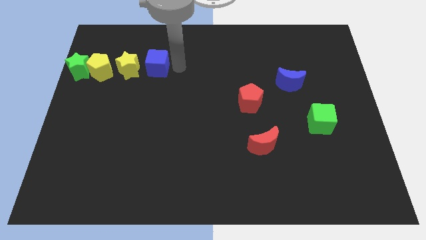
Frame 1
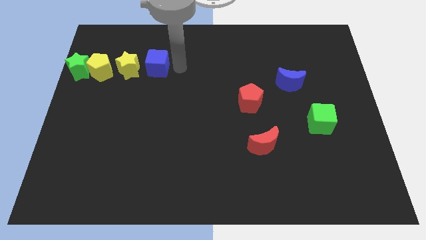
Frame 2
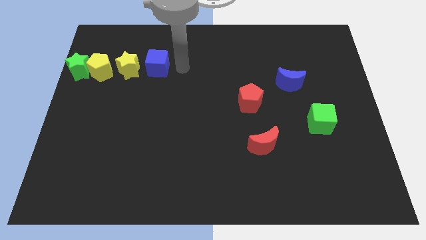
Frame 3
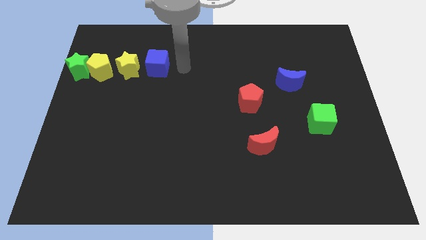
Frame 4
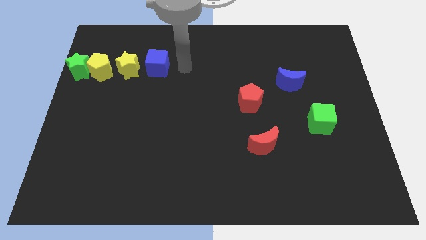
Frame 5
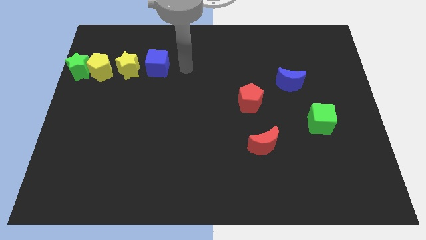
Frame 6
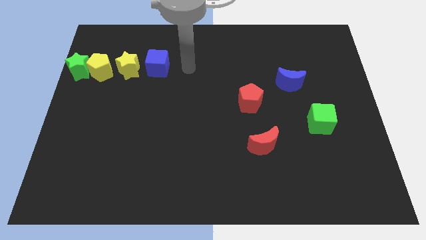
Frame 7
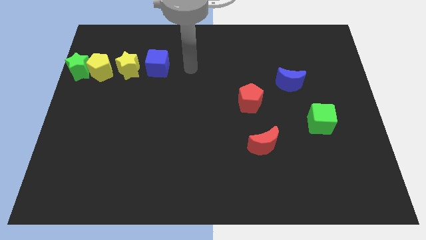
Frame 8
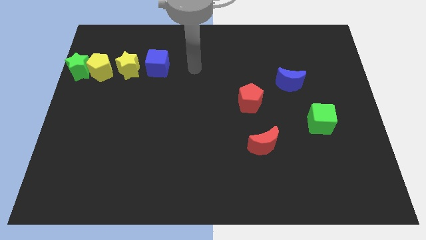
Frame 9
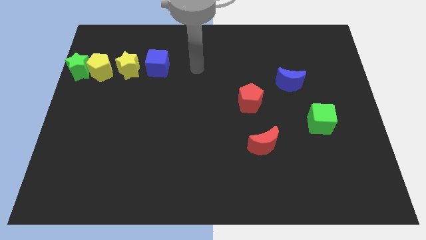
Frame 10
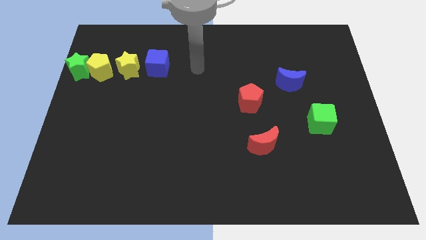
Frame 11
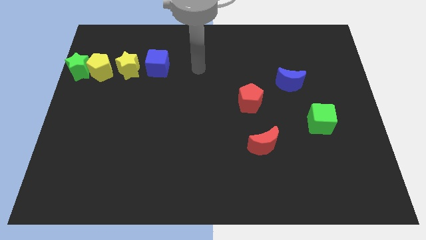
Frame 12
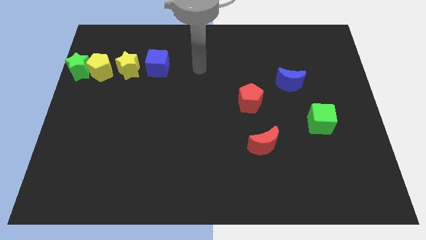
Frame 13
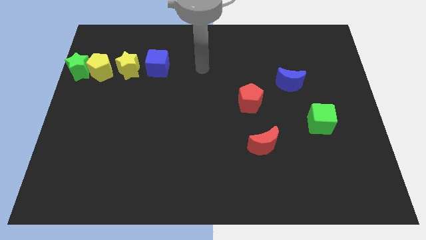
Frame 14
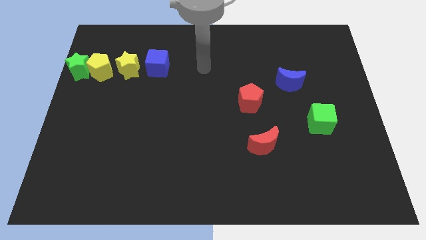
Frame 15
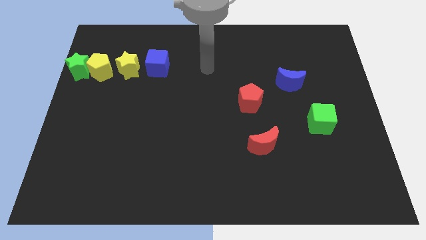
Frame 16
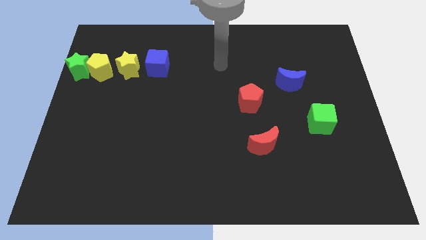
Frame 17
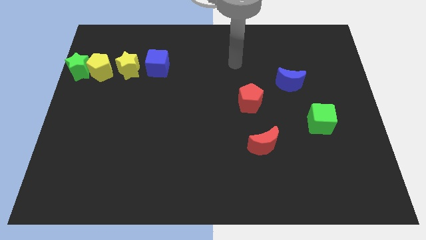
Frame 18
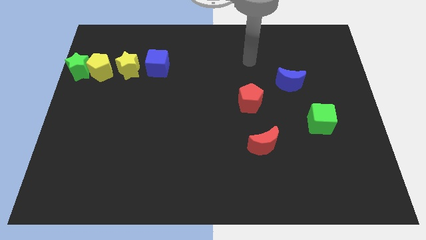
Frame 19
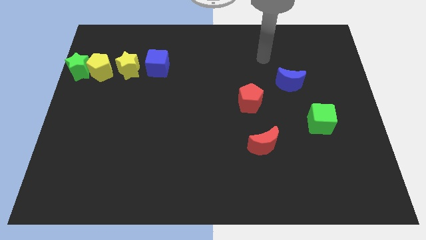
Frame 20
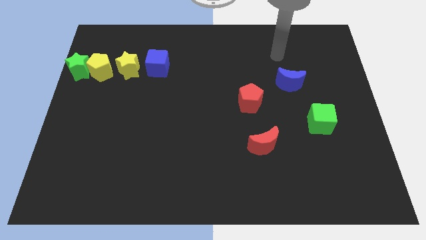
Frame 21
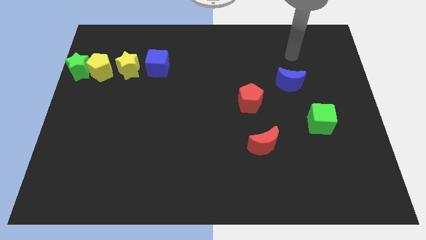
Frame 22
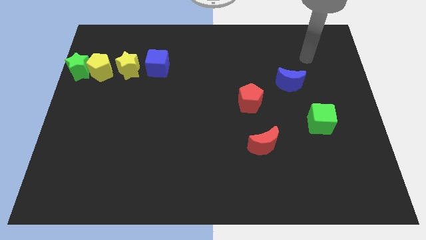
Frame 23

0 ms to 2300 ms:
move away from the blue cube

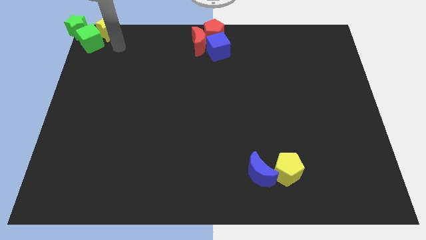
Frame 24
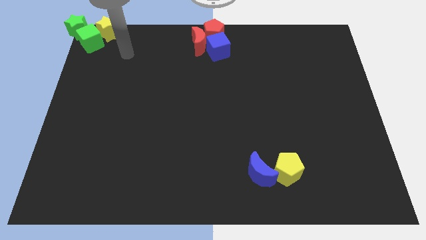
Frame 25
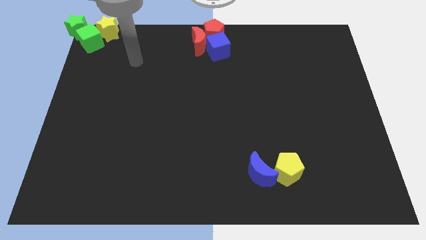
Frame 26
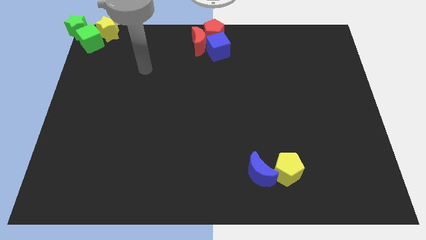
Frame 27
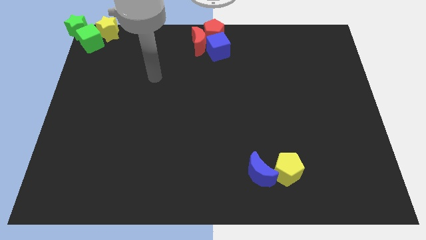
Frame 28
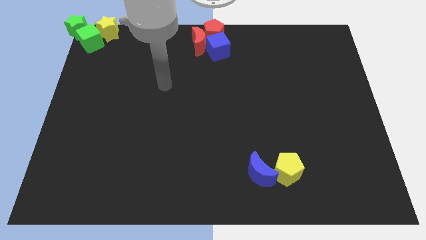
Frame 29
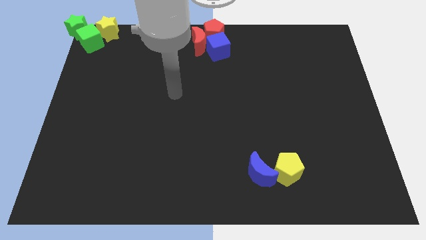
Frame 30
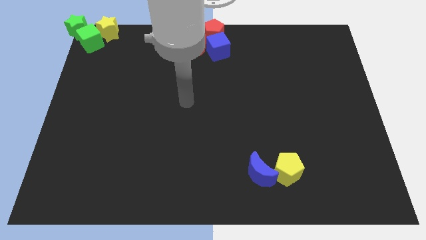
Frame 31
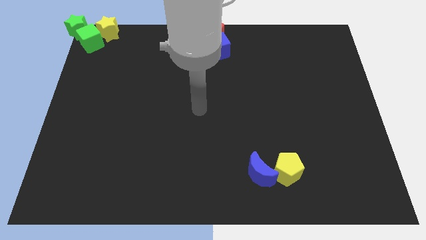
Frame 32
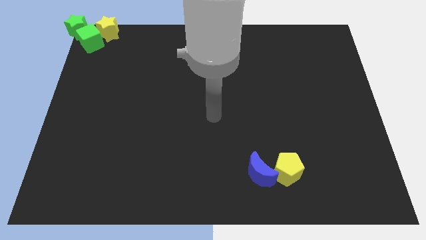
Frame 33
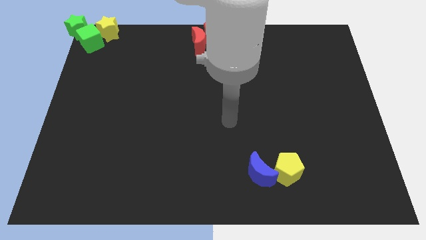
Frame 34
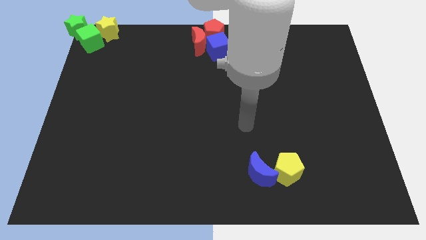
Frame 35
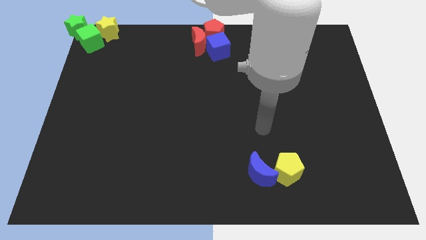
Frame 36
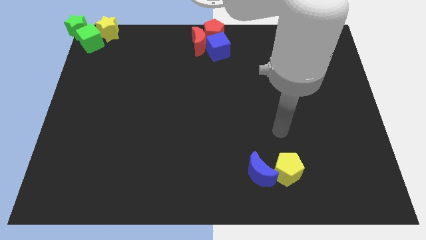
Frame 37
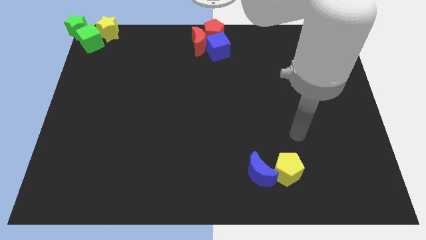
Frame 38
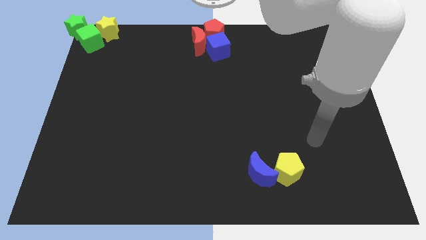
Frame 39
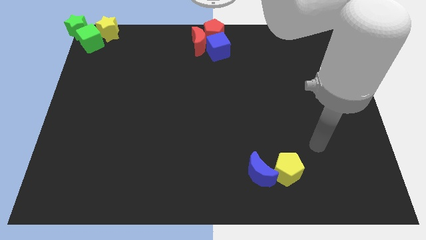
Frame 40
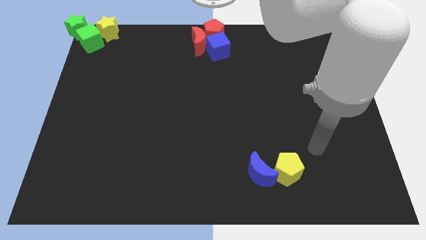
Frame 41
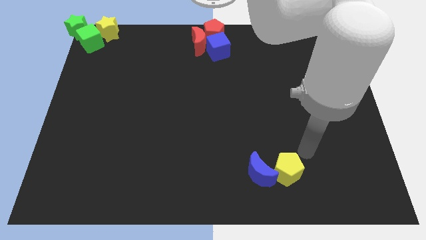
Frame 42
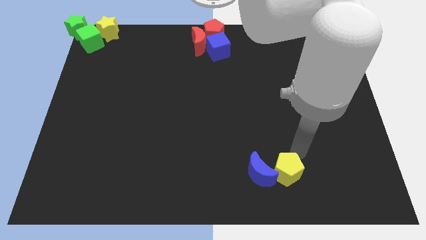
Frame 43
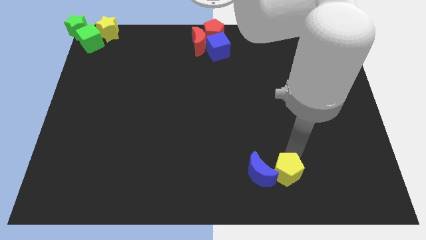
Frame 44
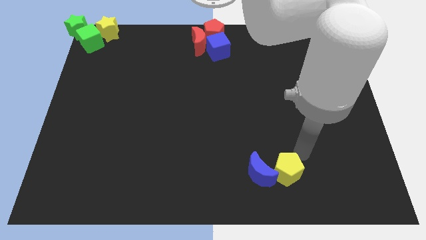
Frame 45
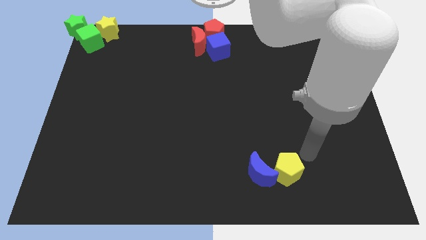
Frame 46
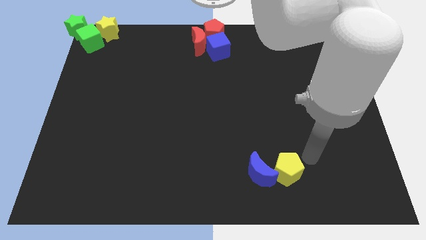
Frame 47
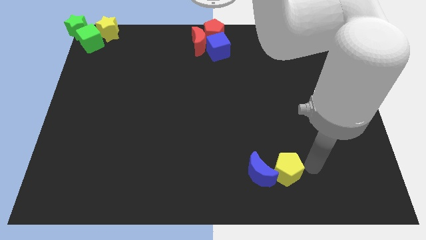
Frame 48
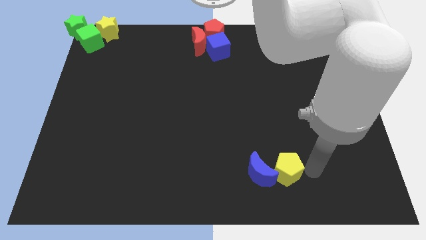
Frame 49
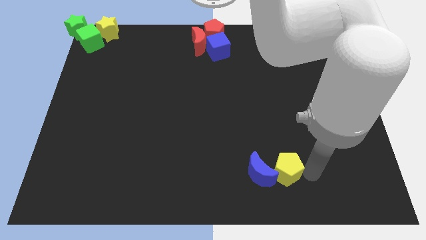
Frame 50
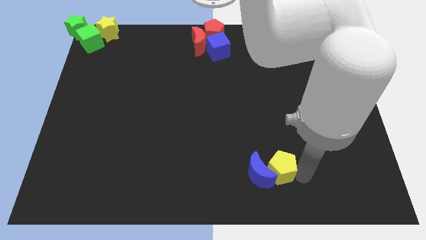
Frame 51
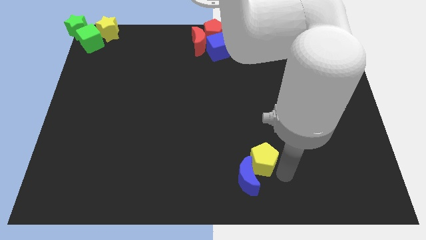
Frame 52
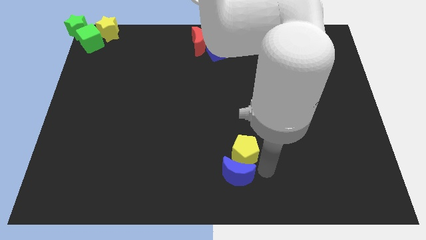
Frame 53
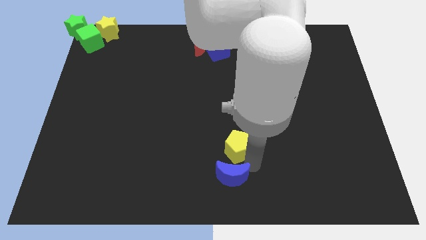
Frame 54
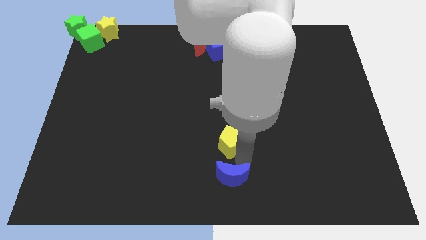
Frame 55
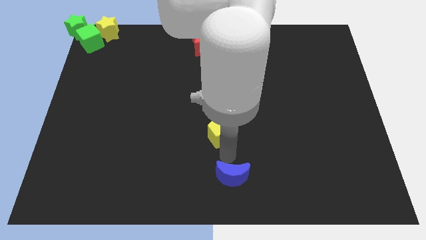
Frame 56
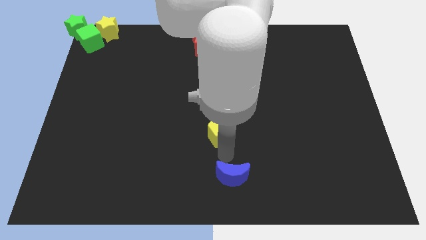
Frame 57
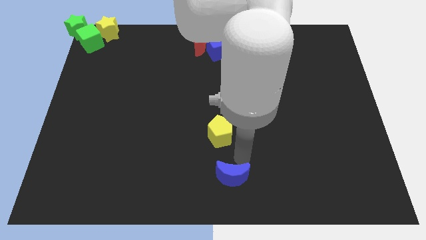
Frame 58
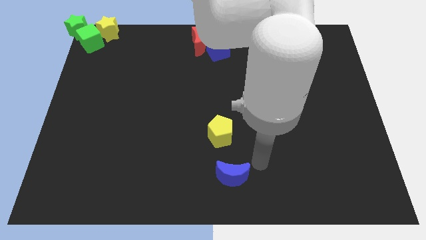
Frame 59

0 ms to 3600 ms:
separate the yellow pentagon and the blue crescent

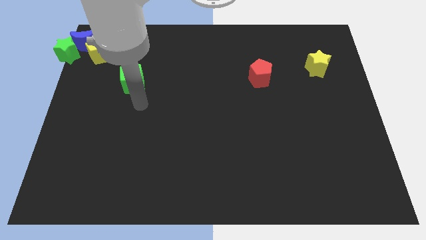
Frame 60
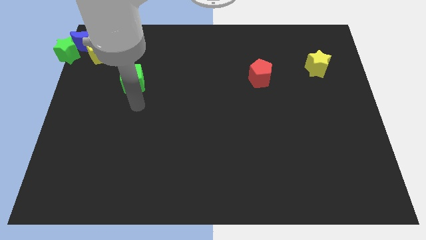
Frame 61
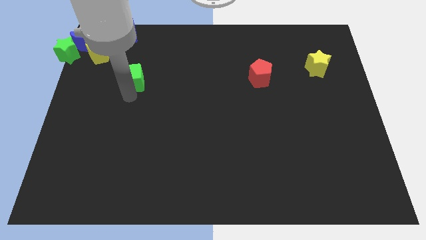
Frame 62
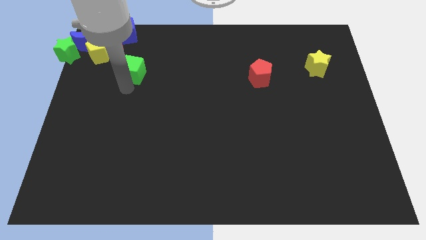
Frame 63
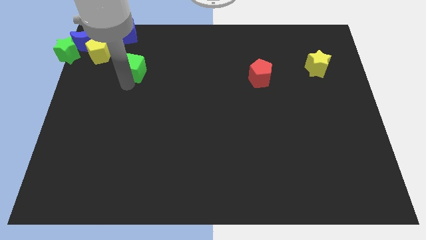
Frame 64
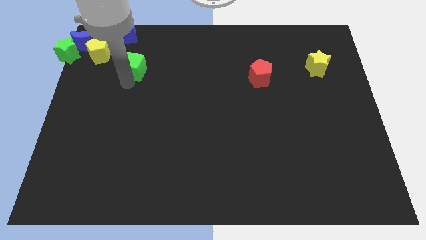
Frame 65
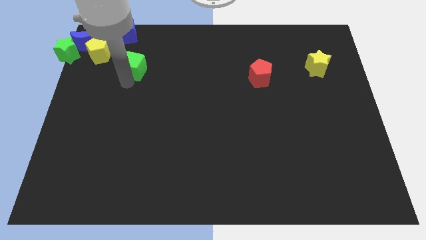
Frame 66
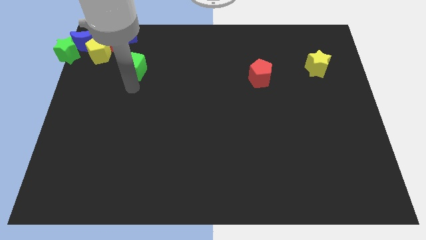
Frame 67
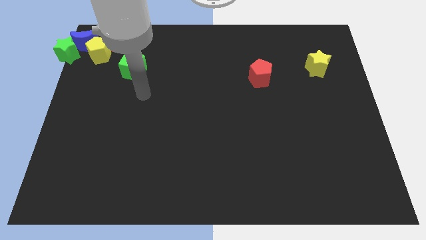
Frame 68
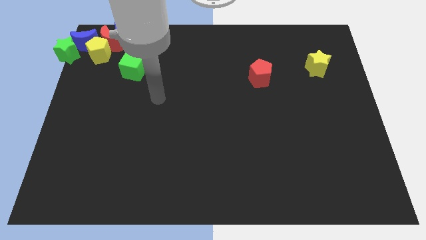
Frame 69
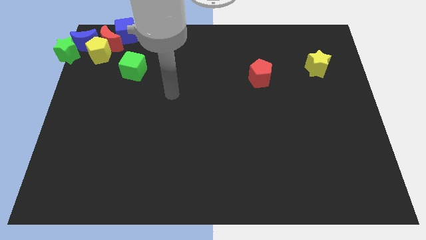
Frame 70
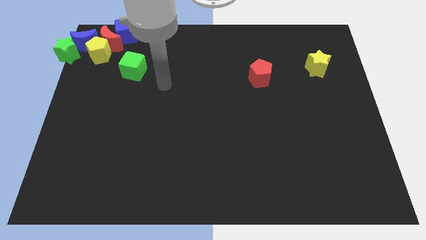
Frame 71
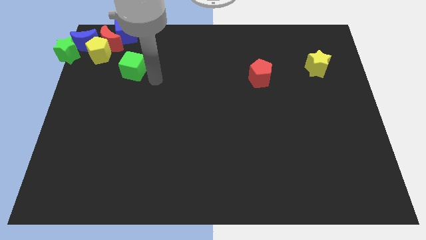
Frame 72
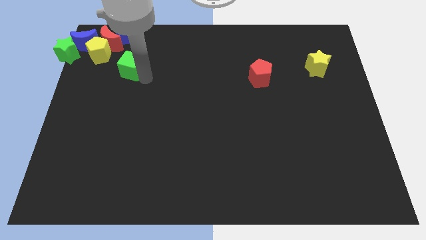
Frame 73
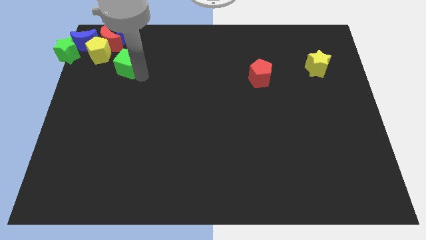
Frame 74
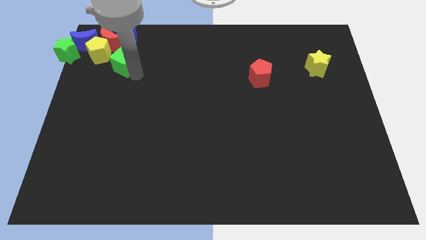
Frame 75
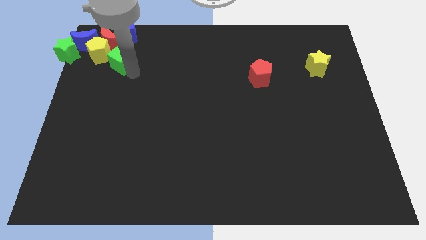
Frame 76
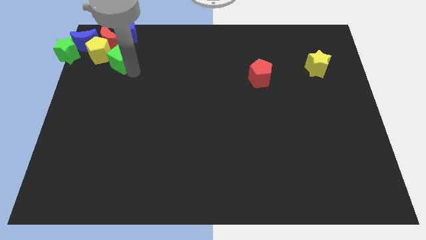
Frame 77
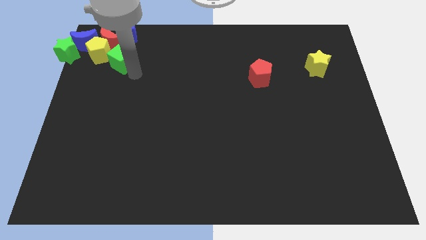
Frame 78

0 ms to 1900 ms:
push the green cube to the top left of the board

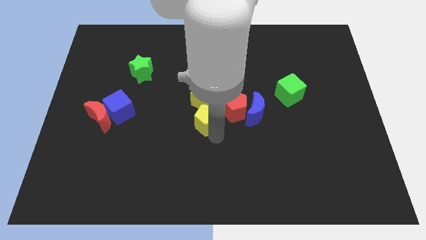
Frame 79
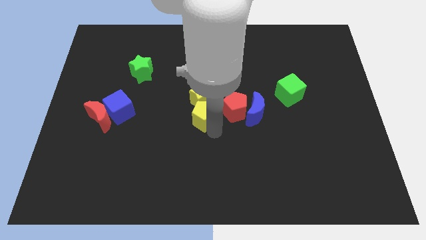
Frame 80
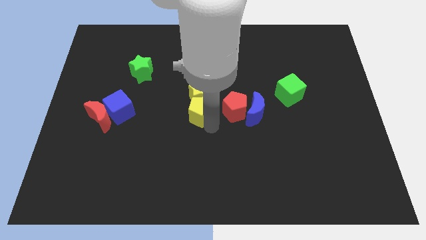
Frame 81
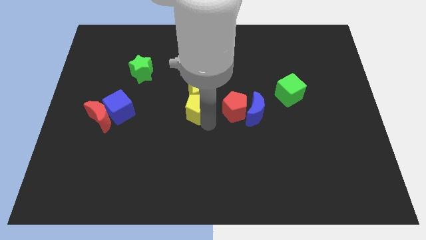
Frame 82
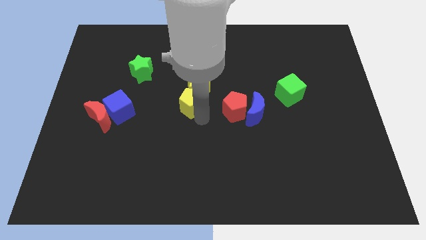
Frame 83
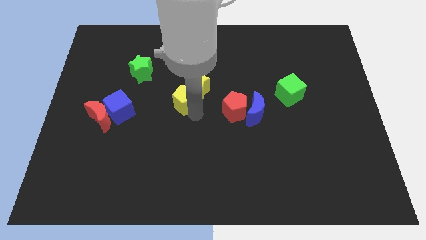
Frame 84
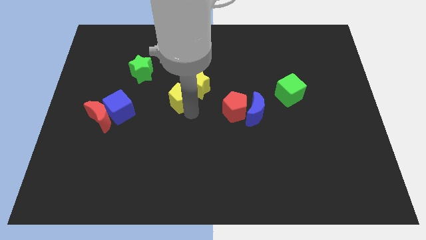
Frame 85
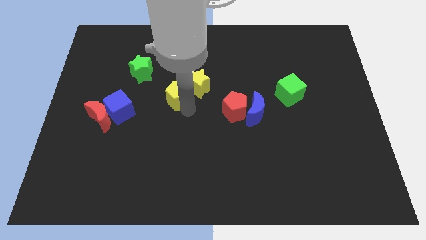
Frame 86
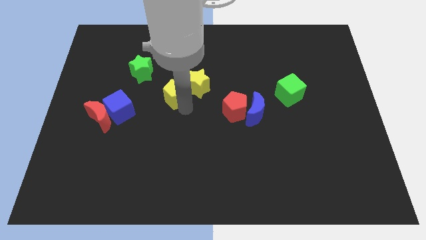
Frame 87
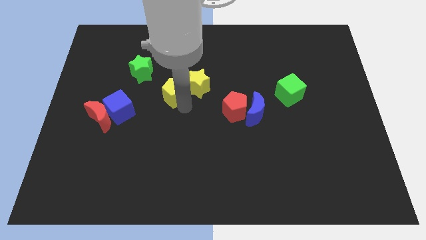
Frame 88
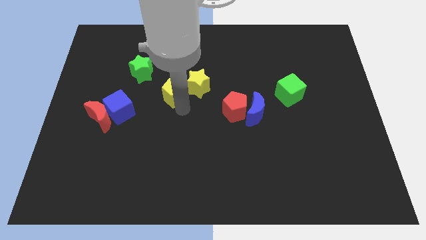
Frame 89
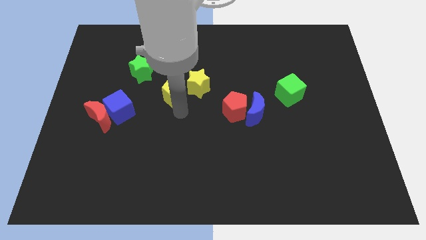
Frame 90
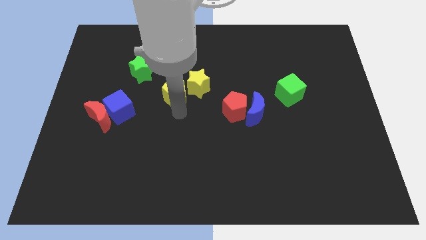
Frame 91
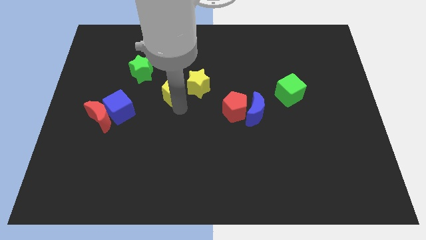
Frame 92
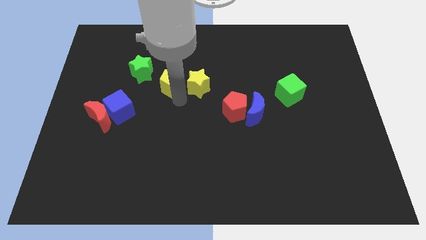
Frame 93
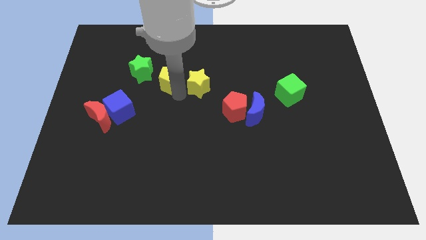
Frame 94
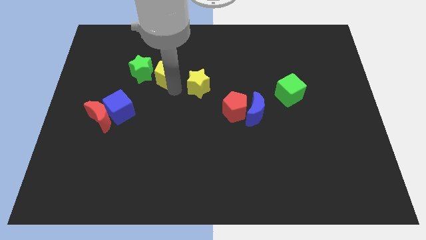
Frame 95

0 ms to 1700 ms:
push the yellow pentagon in between the yellow star and the green star
